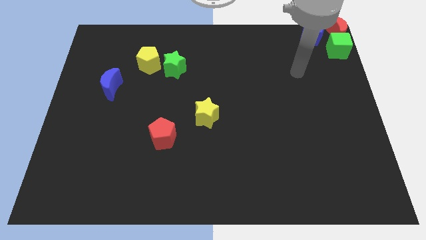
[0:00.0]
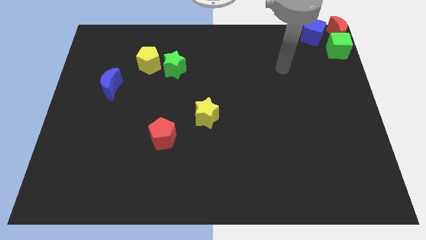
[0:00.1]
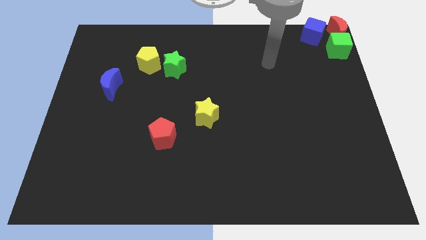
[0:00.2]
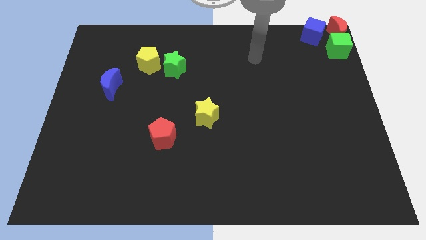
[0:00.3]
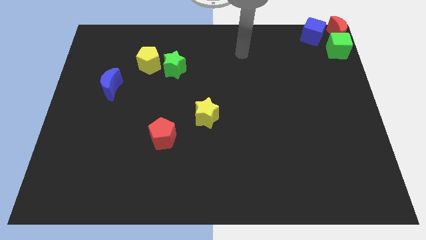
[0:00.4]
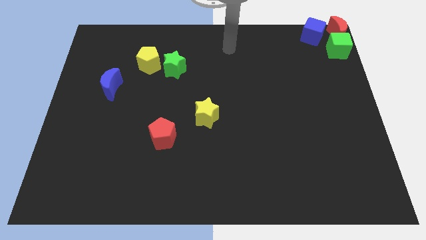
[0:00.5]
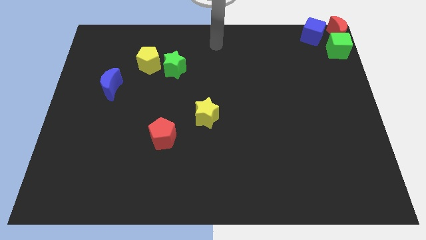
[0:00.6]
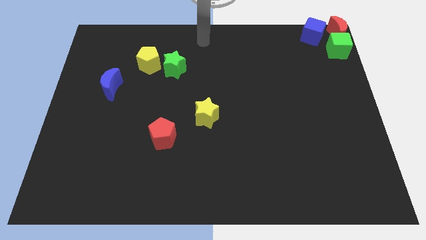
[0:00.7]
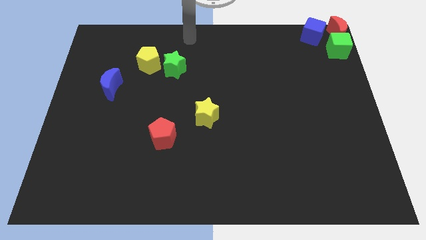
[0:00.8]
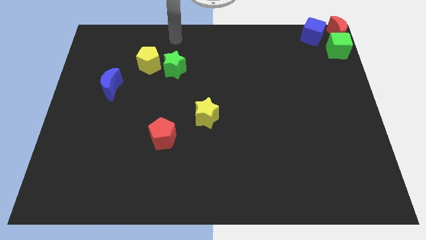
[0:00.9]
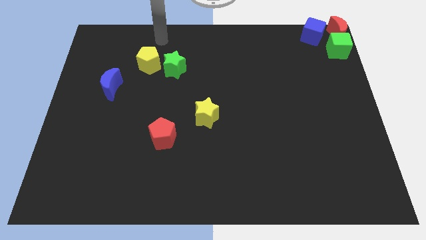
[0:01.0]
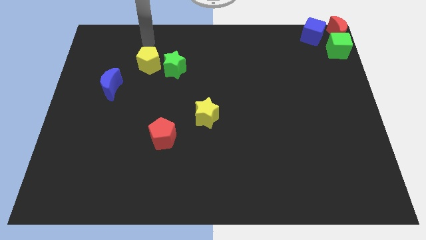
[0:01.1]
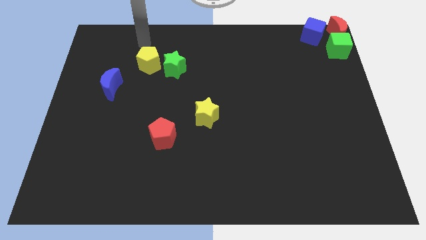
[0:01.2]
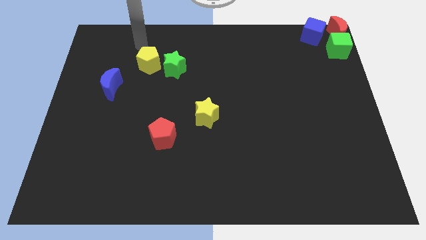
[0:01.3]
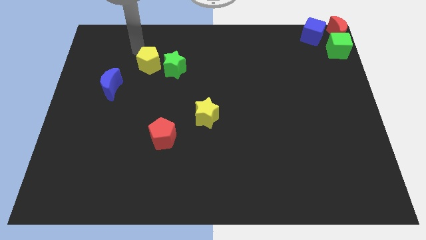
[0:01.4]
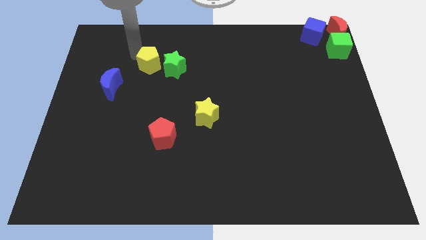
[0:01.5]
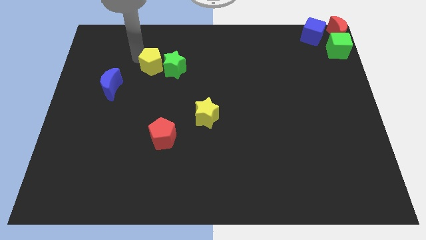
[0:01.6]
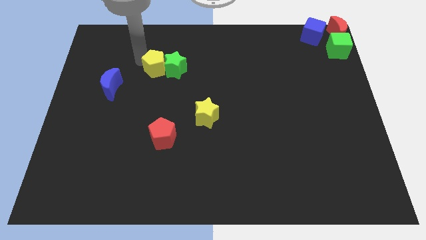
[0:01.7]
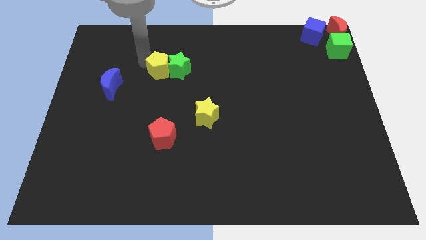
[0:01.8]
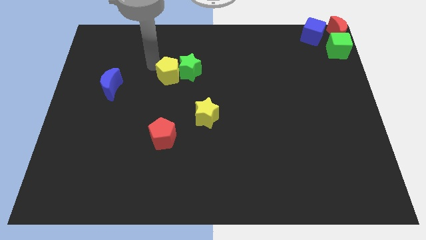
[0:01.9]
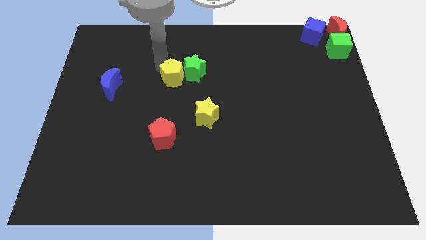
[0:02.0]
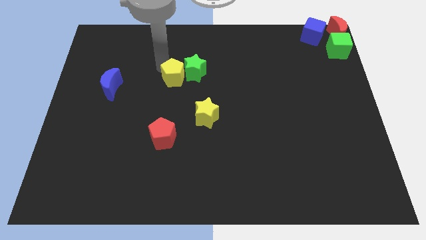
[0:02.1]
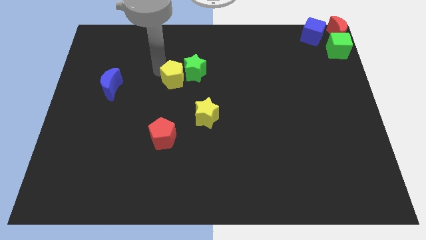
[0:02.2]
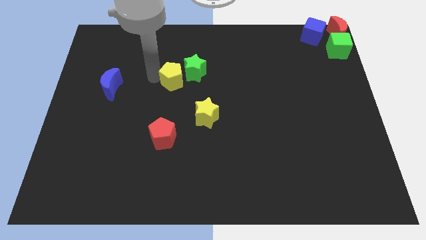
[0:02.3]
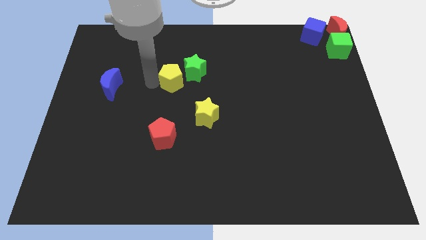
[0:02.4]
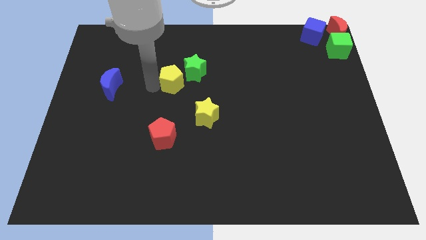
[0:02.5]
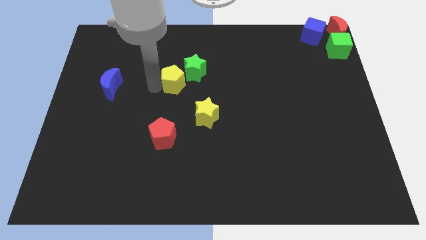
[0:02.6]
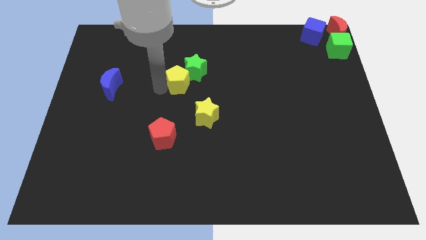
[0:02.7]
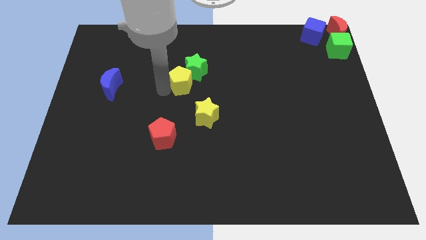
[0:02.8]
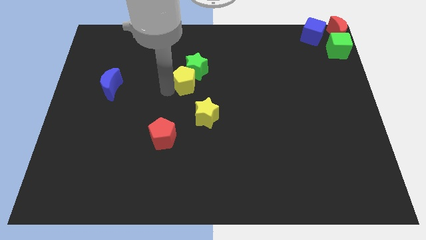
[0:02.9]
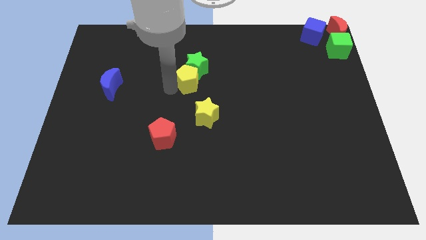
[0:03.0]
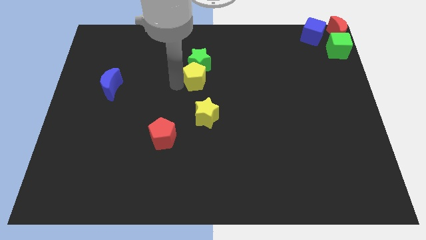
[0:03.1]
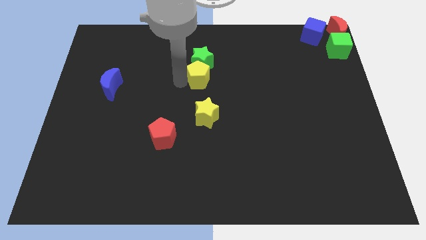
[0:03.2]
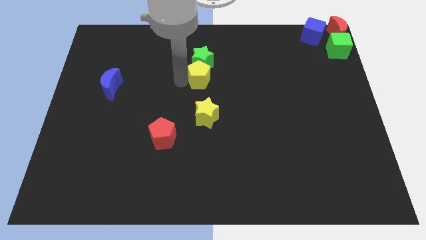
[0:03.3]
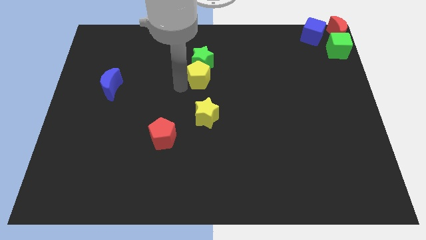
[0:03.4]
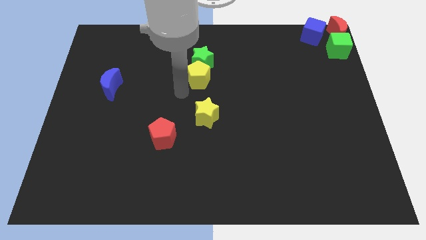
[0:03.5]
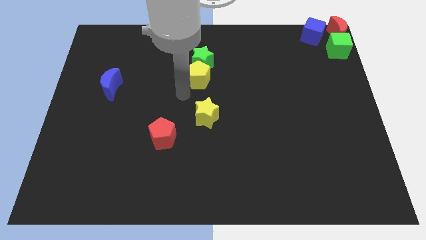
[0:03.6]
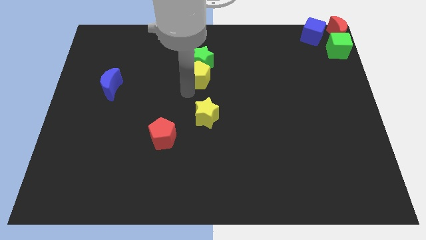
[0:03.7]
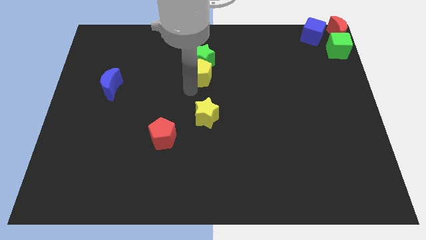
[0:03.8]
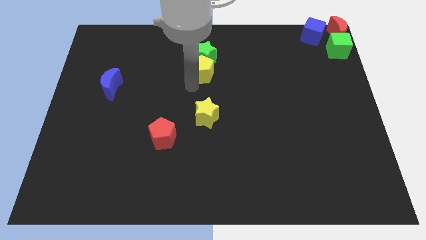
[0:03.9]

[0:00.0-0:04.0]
push yellow pentagon in between yellow star and green star

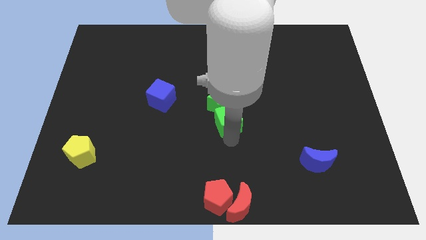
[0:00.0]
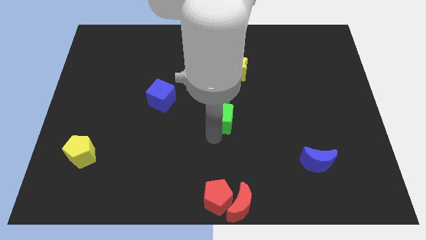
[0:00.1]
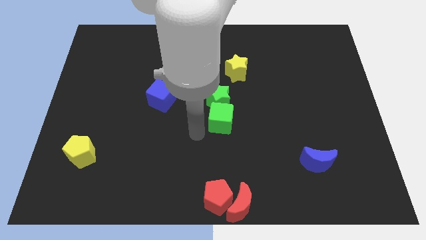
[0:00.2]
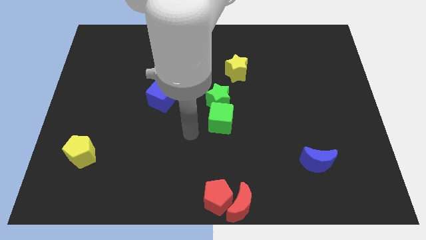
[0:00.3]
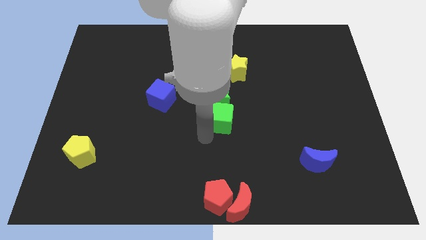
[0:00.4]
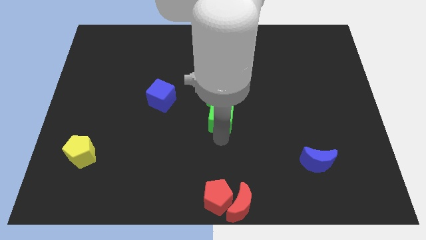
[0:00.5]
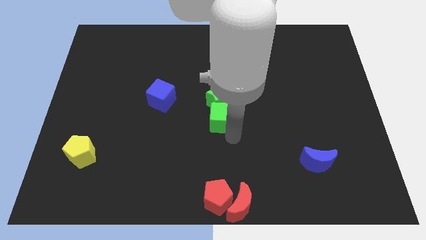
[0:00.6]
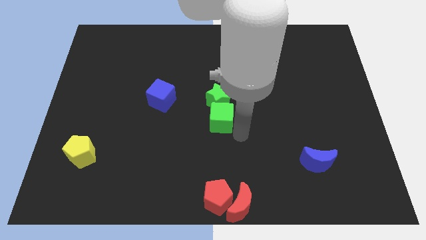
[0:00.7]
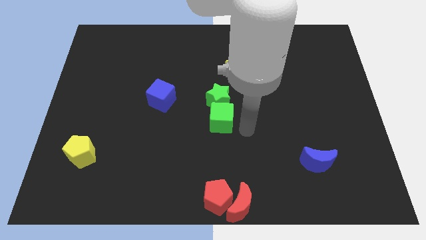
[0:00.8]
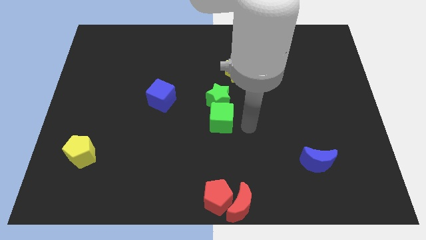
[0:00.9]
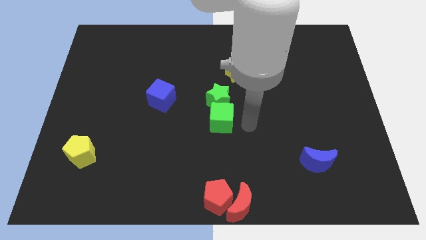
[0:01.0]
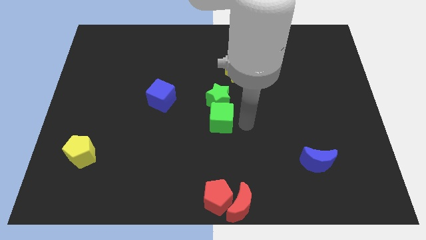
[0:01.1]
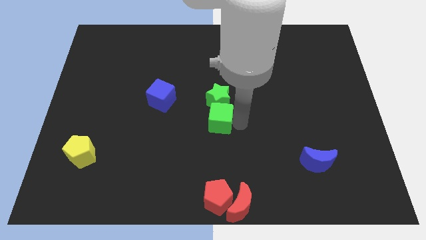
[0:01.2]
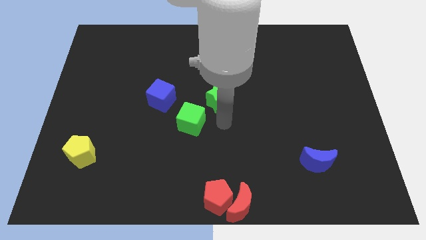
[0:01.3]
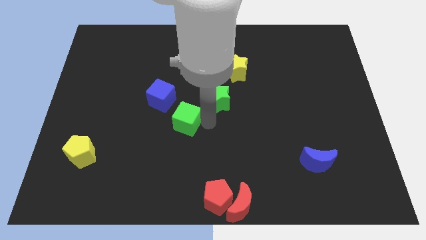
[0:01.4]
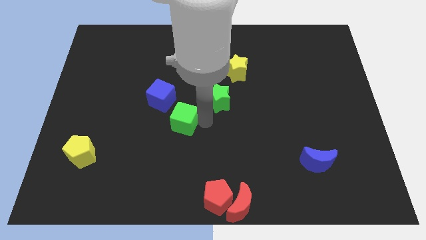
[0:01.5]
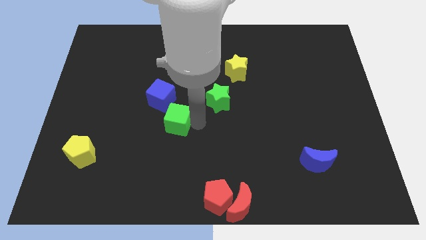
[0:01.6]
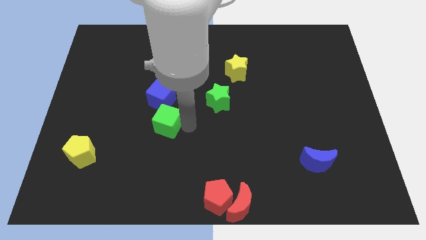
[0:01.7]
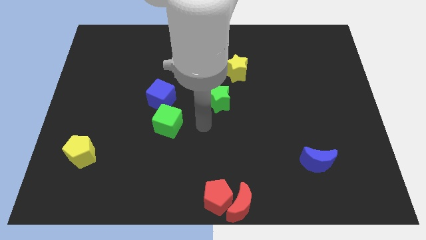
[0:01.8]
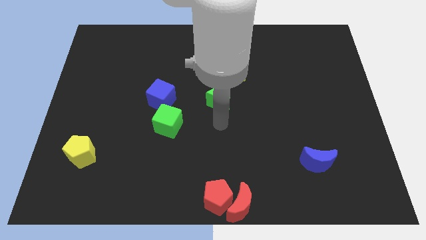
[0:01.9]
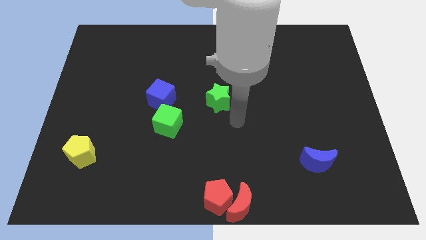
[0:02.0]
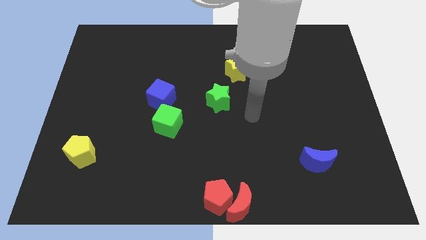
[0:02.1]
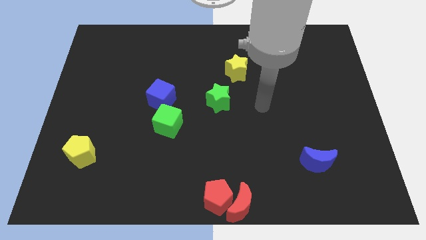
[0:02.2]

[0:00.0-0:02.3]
separate the green cube from the green star

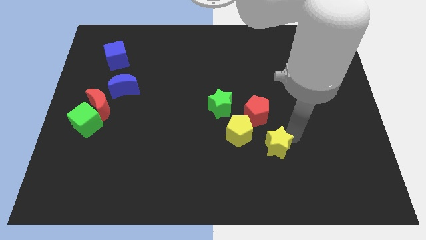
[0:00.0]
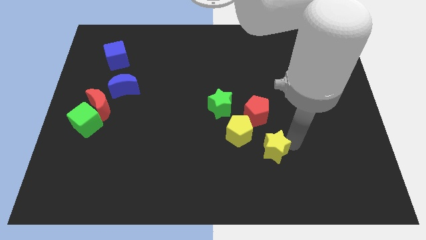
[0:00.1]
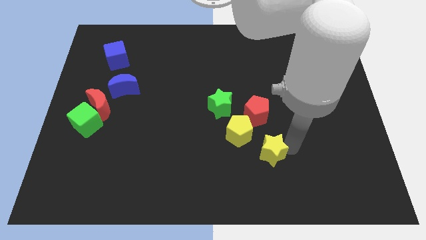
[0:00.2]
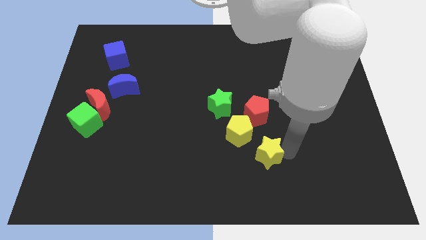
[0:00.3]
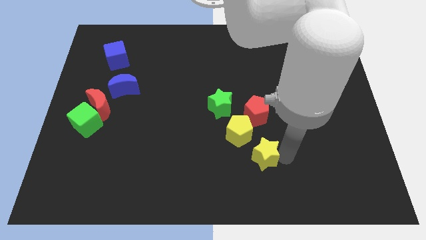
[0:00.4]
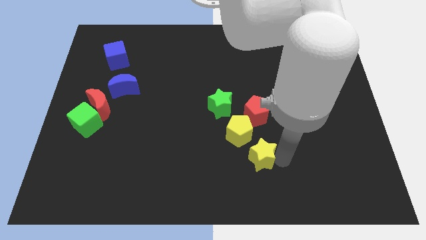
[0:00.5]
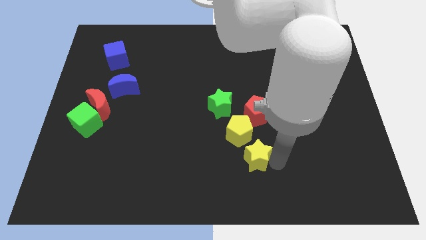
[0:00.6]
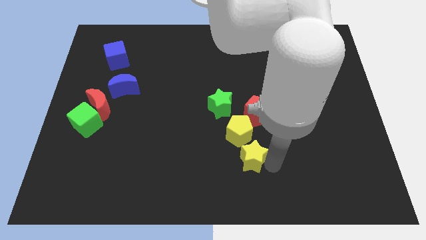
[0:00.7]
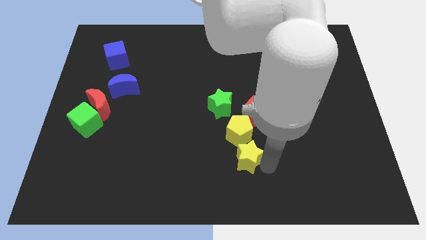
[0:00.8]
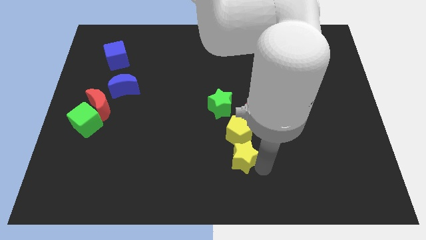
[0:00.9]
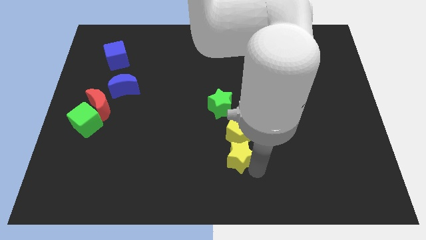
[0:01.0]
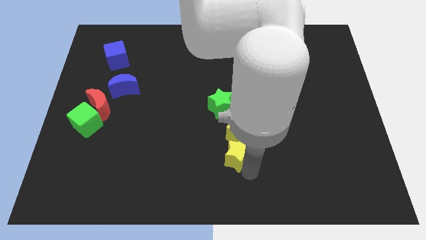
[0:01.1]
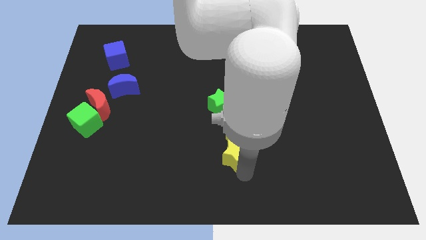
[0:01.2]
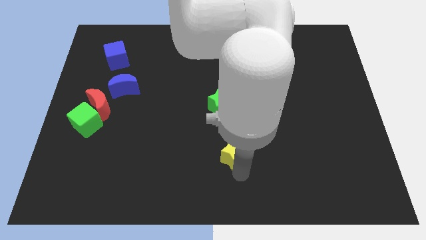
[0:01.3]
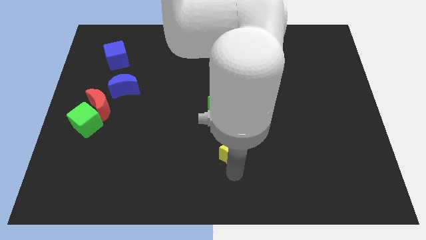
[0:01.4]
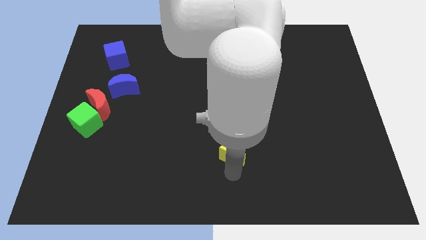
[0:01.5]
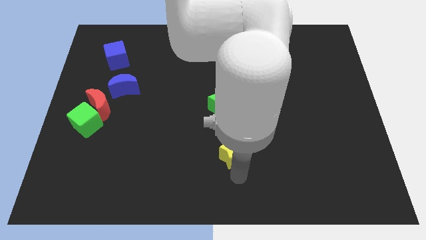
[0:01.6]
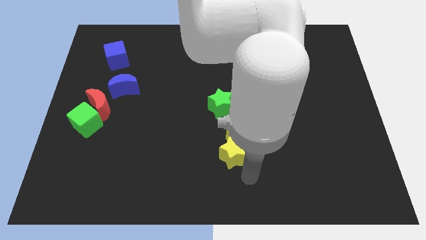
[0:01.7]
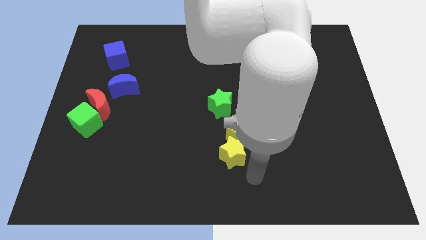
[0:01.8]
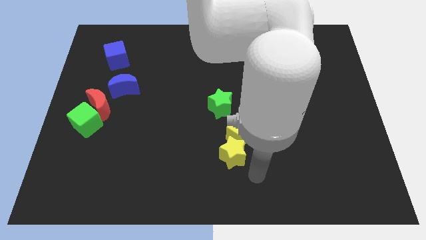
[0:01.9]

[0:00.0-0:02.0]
place the yellow star to the bottom of yellow pentagon

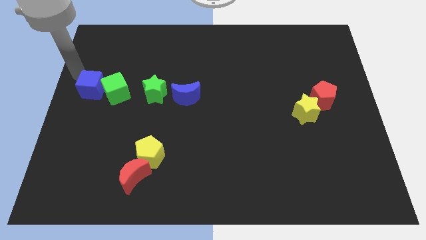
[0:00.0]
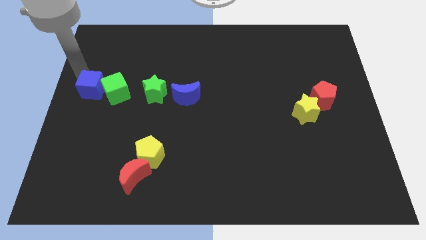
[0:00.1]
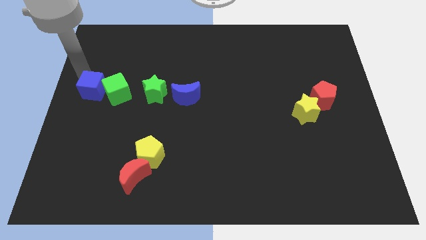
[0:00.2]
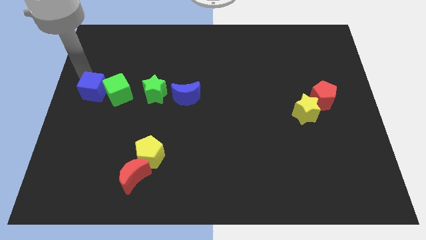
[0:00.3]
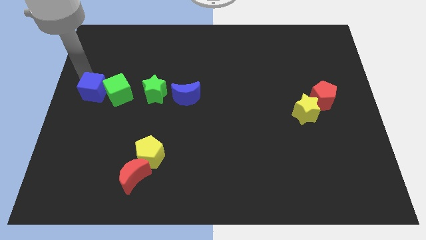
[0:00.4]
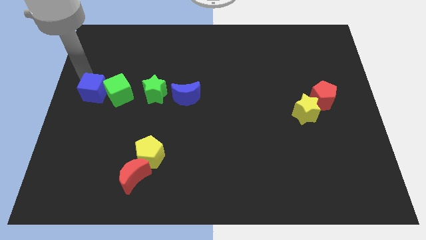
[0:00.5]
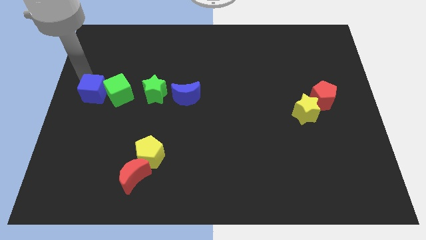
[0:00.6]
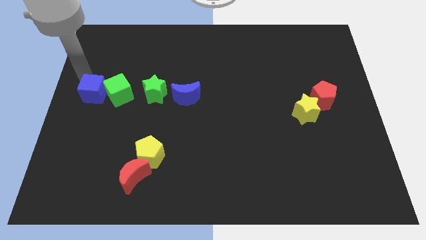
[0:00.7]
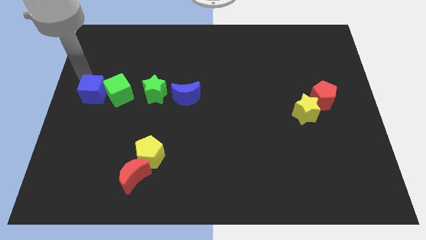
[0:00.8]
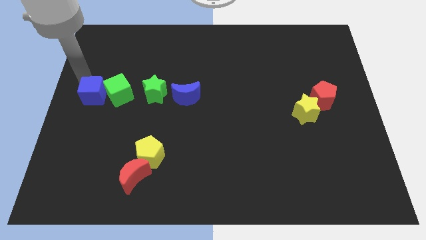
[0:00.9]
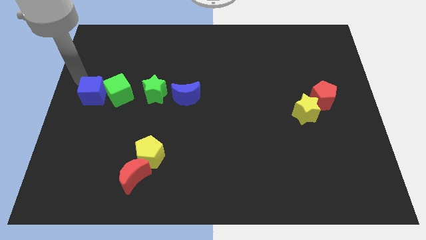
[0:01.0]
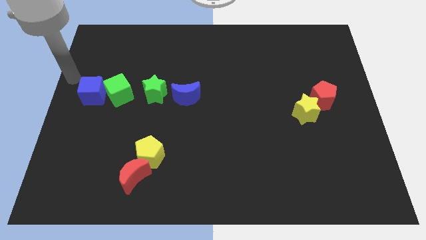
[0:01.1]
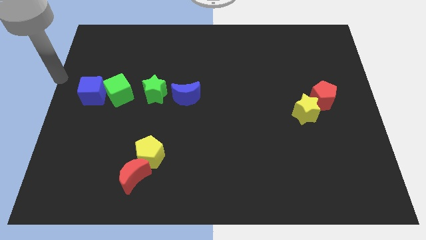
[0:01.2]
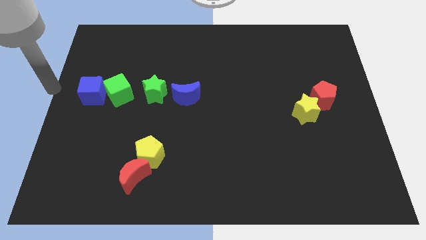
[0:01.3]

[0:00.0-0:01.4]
push the blue cube into the green cube
